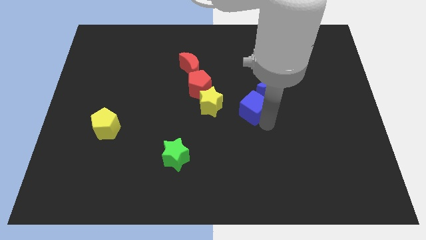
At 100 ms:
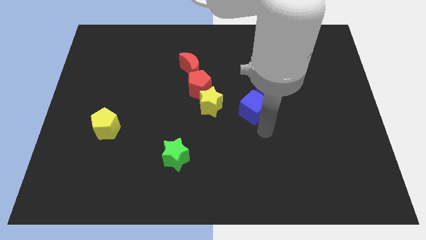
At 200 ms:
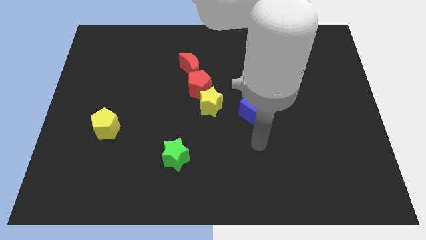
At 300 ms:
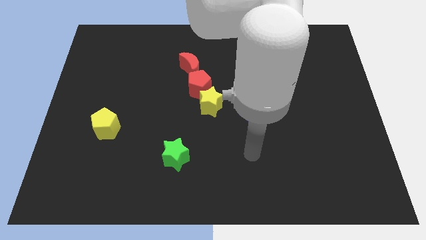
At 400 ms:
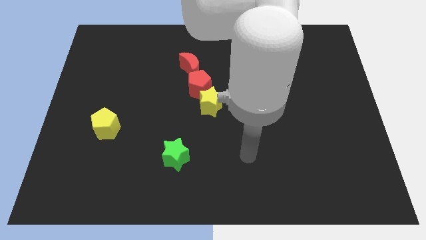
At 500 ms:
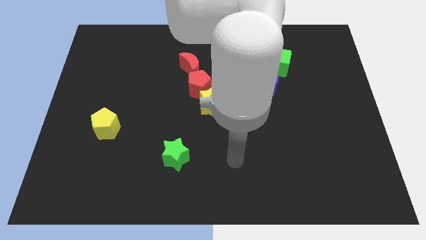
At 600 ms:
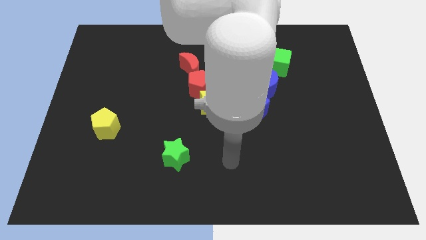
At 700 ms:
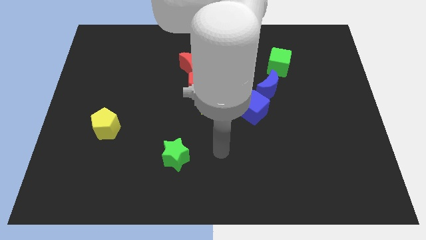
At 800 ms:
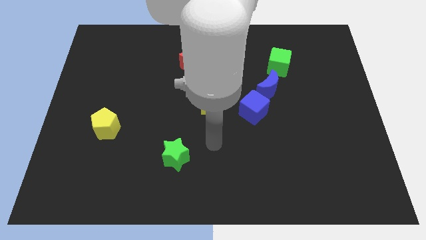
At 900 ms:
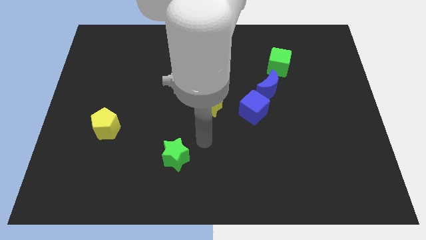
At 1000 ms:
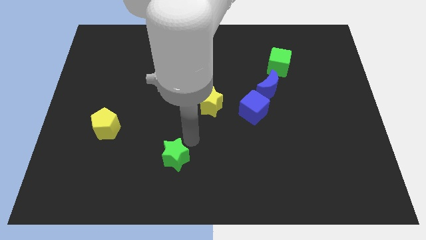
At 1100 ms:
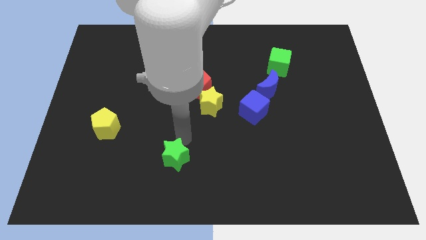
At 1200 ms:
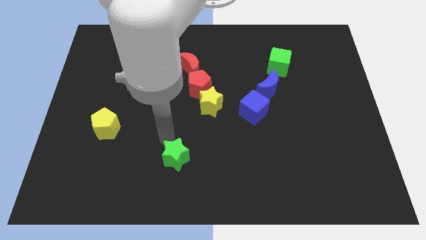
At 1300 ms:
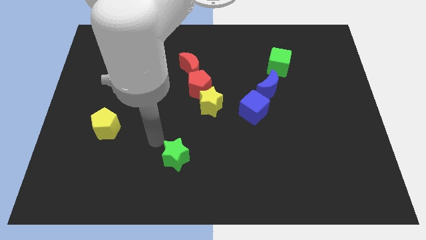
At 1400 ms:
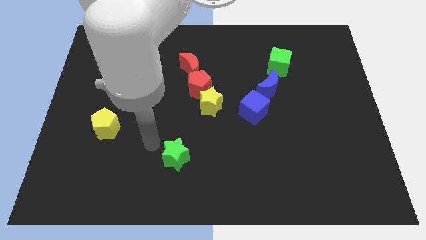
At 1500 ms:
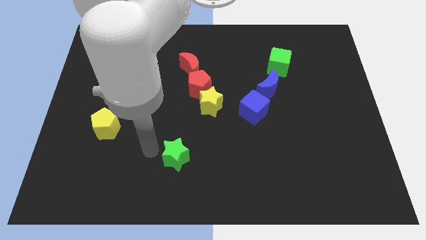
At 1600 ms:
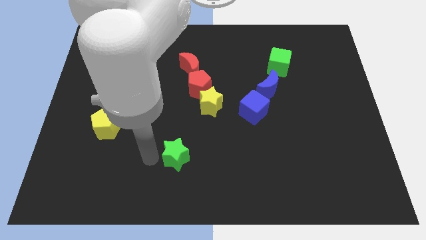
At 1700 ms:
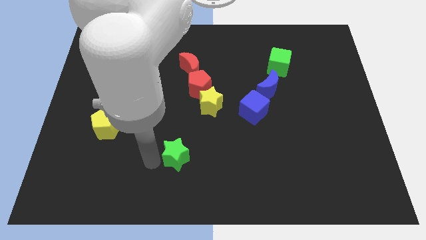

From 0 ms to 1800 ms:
place your arm to the left of green star

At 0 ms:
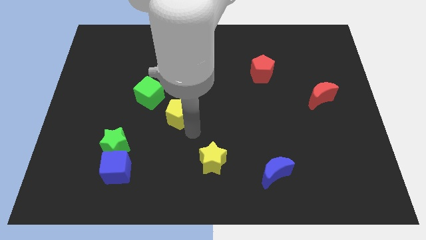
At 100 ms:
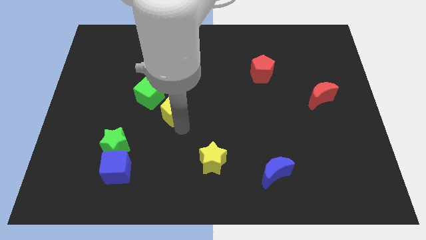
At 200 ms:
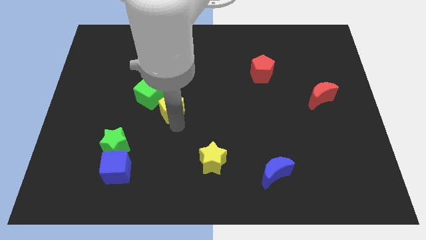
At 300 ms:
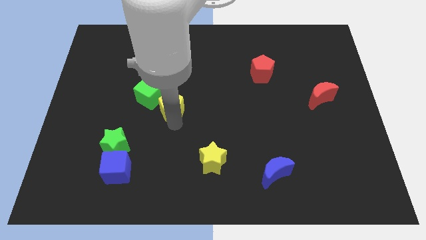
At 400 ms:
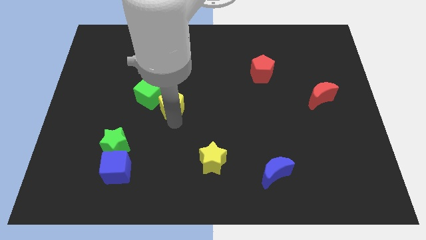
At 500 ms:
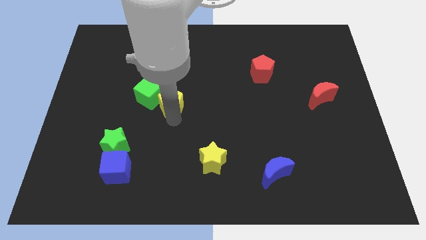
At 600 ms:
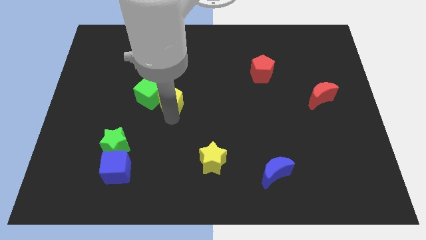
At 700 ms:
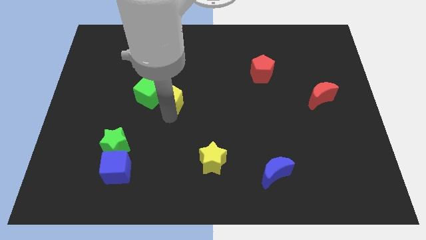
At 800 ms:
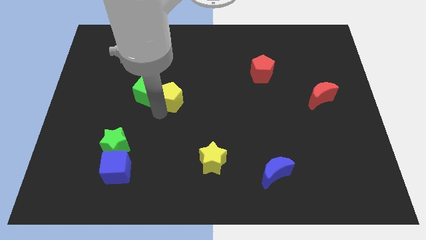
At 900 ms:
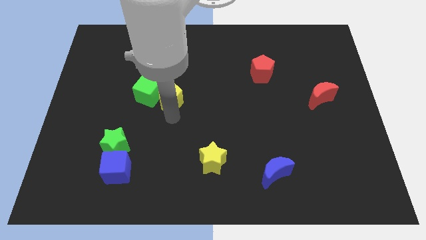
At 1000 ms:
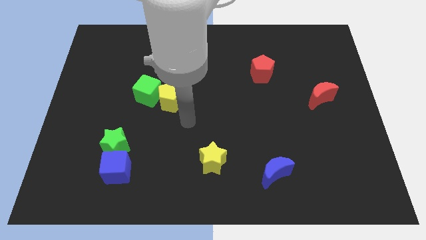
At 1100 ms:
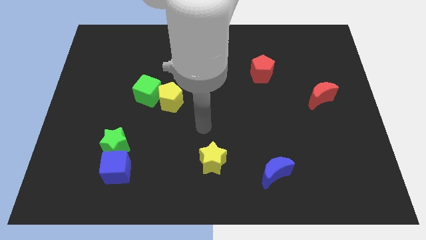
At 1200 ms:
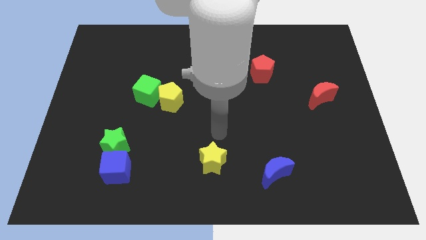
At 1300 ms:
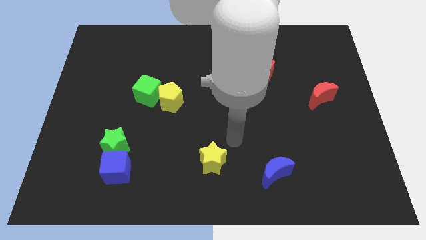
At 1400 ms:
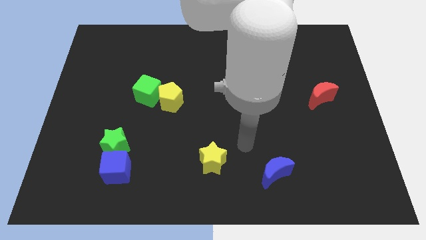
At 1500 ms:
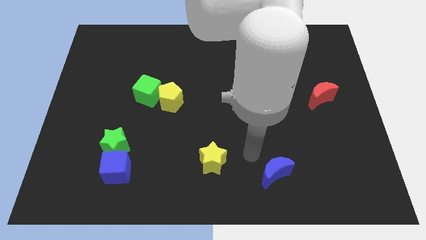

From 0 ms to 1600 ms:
place yellow pentagon to the right of green cube

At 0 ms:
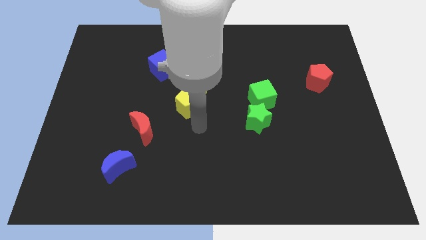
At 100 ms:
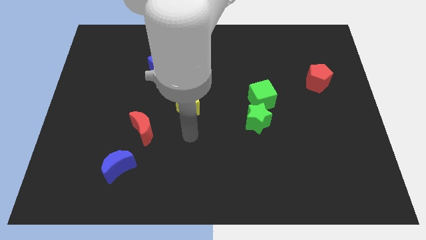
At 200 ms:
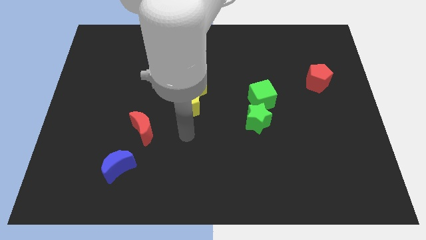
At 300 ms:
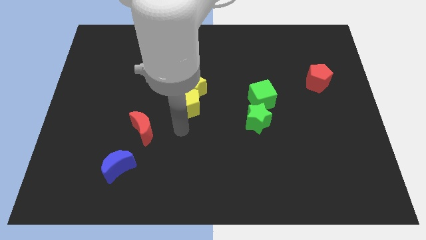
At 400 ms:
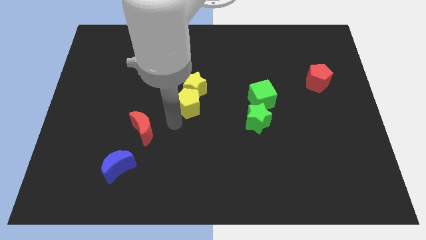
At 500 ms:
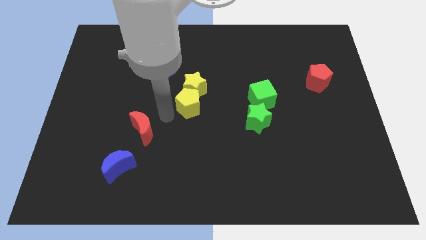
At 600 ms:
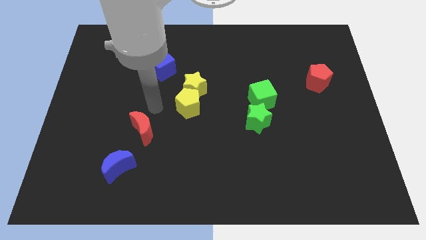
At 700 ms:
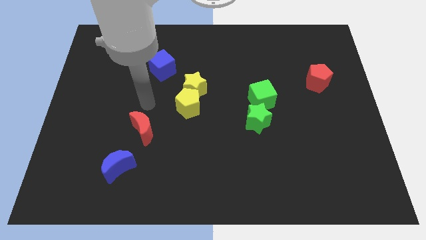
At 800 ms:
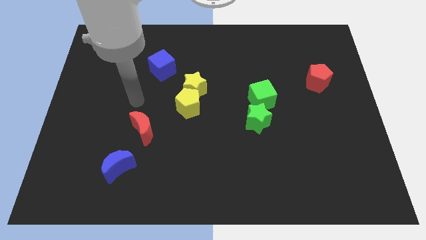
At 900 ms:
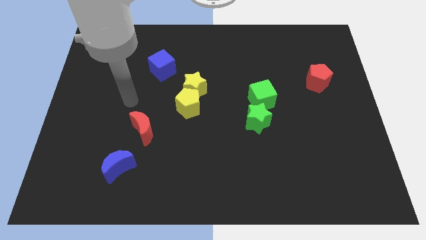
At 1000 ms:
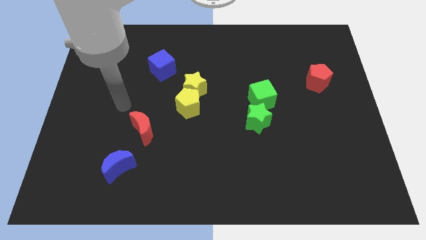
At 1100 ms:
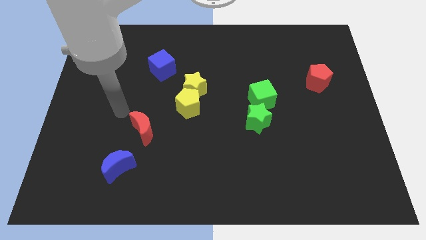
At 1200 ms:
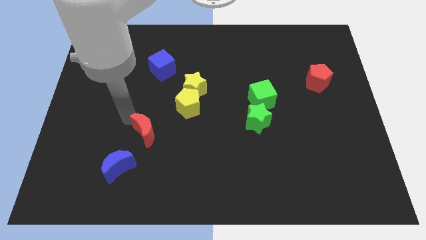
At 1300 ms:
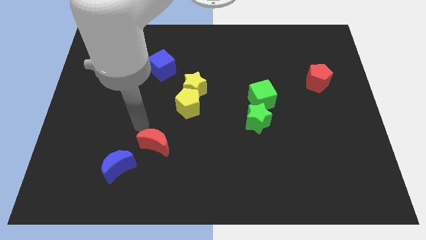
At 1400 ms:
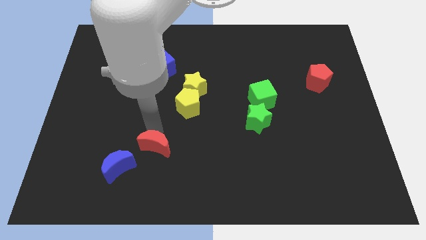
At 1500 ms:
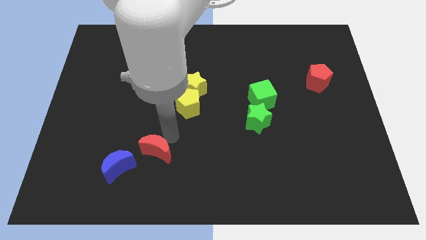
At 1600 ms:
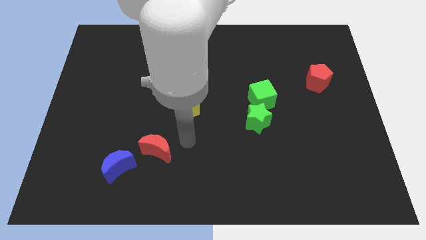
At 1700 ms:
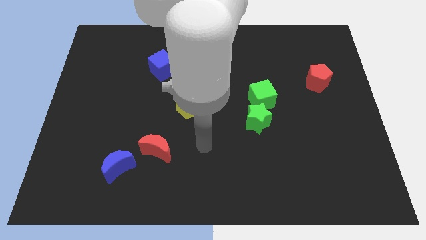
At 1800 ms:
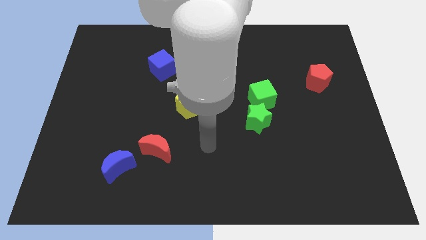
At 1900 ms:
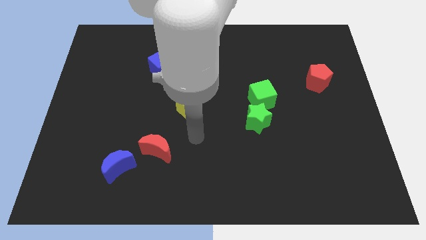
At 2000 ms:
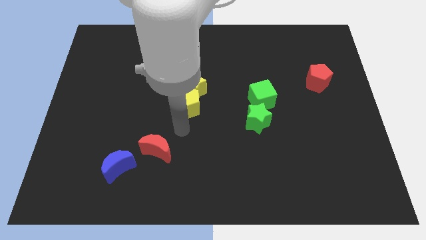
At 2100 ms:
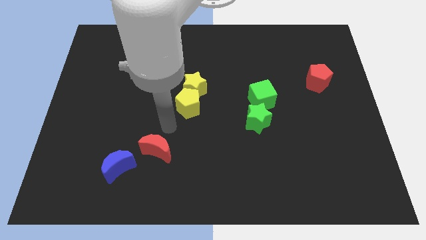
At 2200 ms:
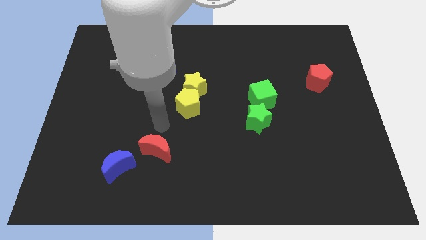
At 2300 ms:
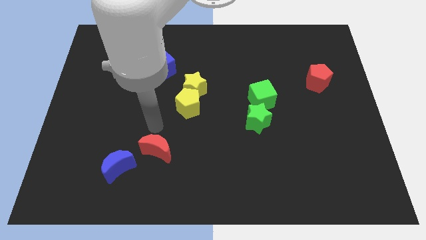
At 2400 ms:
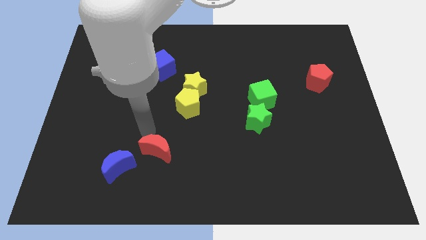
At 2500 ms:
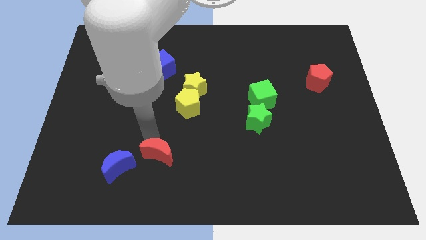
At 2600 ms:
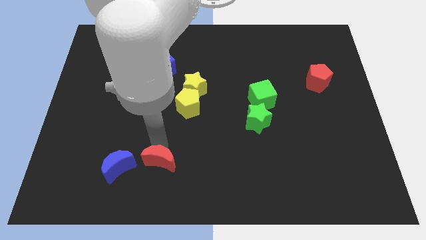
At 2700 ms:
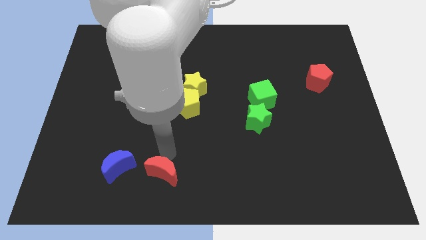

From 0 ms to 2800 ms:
push the red crescent to the right side of the blue crescent

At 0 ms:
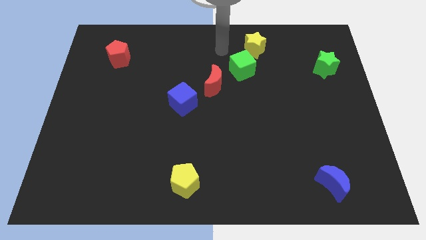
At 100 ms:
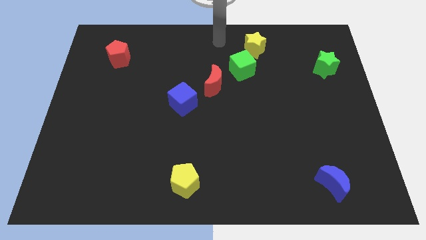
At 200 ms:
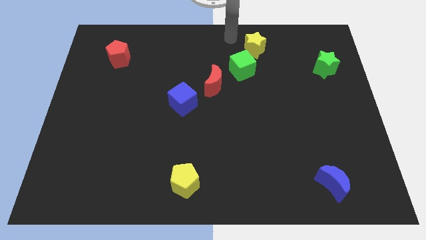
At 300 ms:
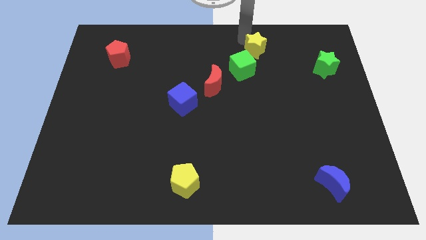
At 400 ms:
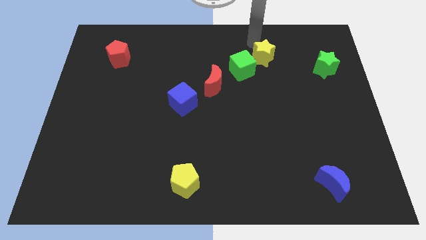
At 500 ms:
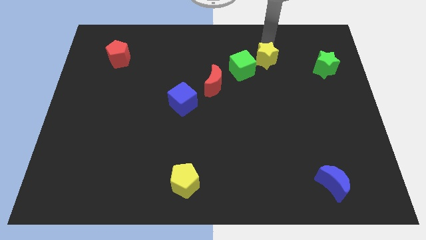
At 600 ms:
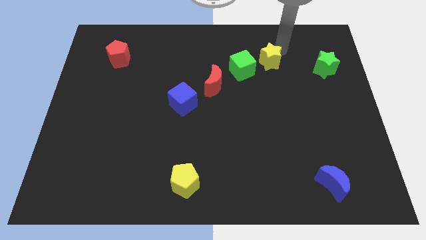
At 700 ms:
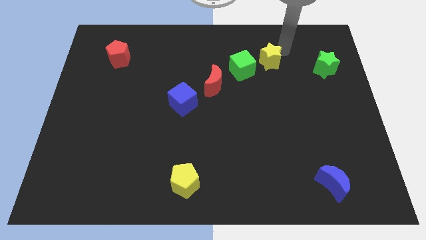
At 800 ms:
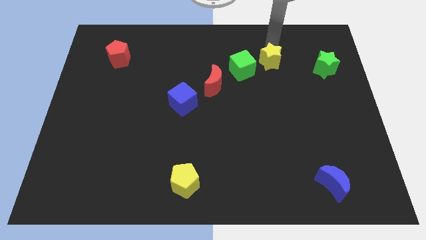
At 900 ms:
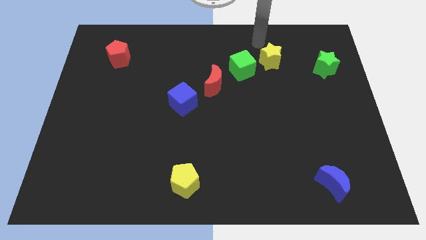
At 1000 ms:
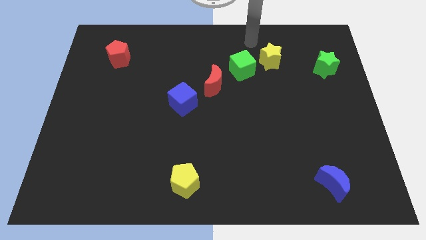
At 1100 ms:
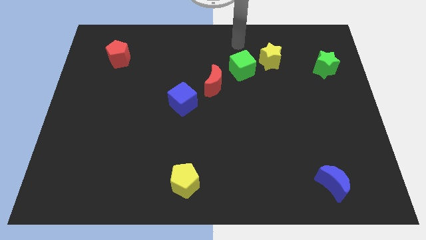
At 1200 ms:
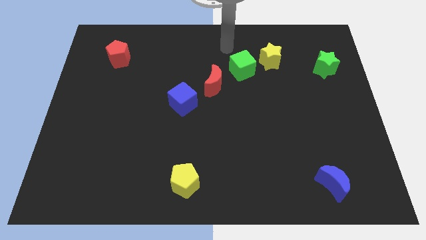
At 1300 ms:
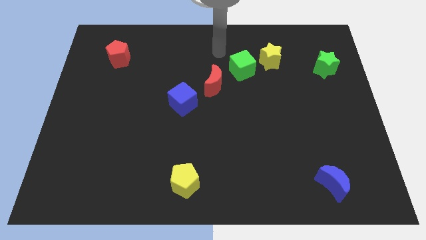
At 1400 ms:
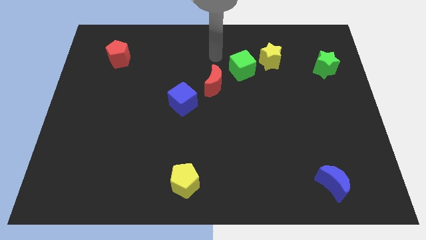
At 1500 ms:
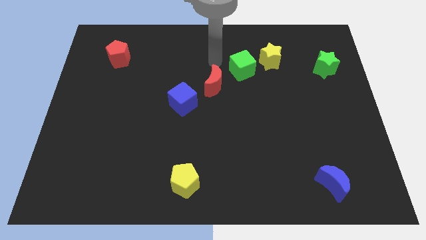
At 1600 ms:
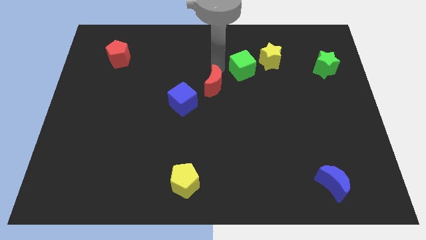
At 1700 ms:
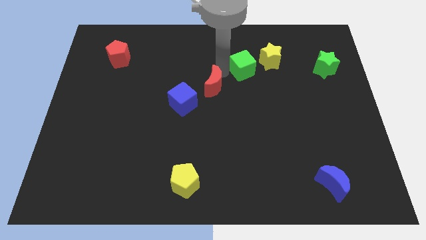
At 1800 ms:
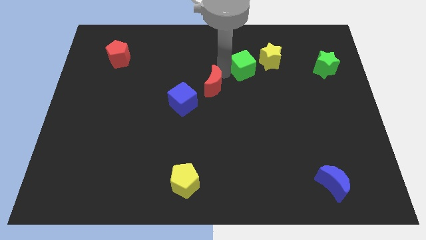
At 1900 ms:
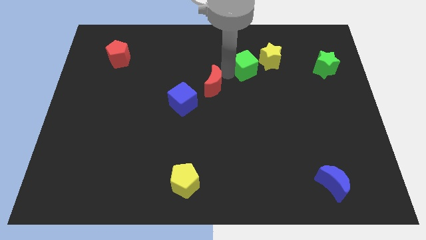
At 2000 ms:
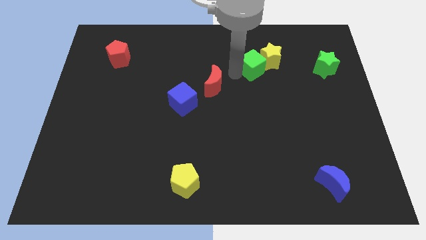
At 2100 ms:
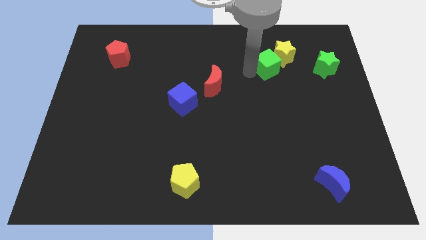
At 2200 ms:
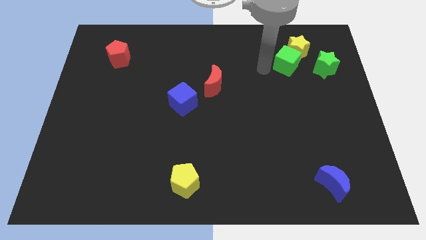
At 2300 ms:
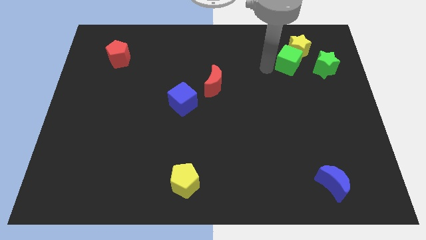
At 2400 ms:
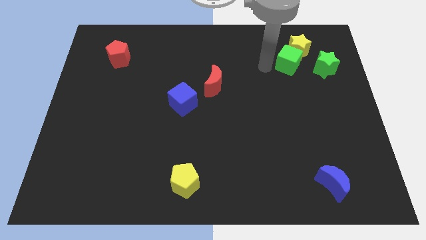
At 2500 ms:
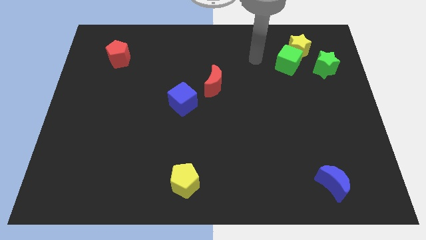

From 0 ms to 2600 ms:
push green cube in to yellow star
